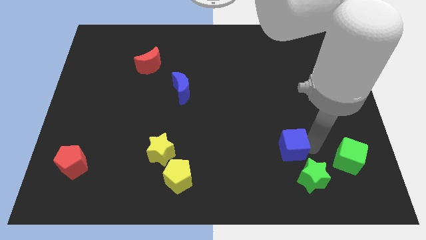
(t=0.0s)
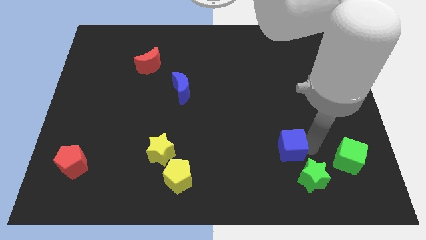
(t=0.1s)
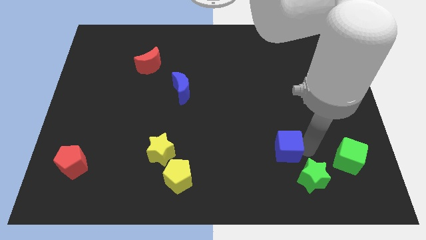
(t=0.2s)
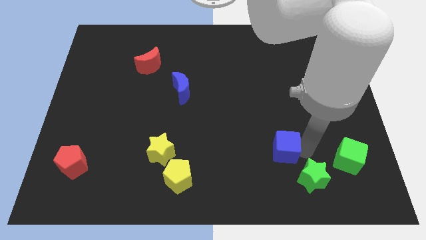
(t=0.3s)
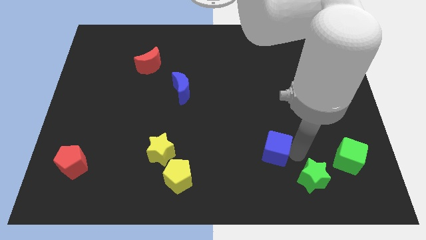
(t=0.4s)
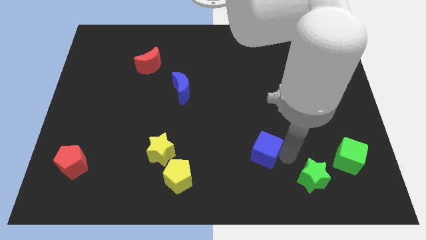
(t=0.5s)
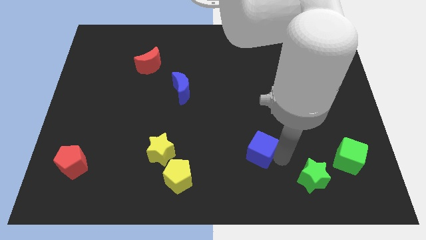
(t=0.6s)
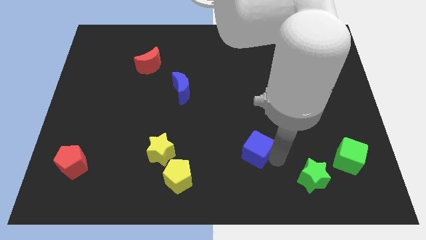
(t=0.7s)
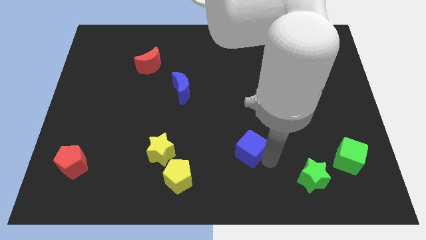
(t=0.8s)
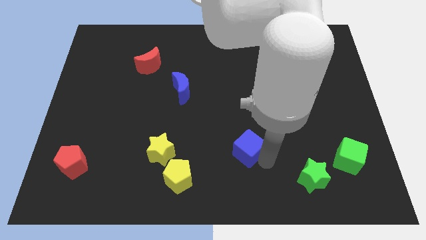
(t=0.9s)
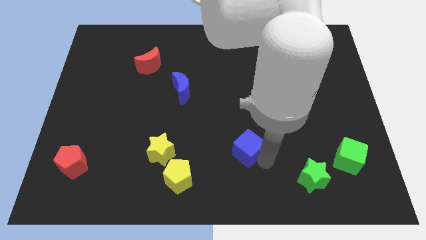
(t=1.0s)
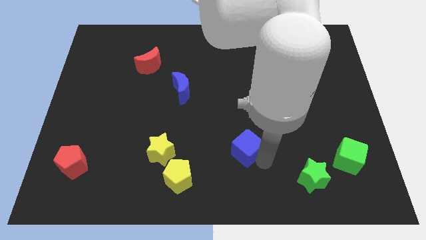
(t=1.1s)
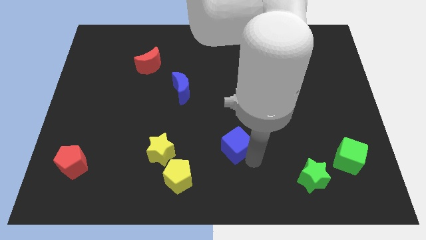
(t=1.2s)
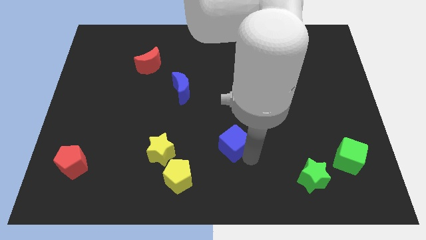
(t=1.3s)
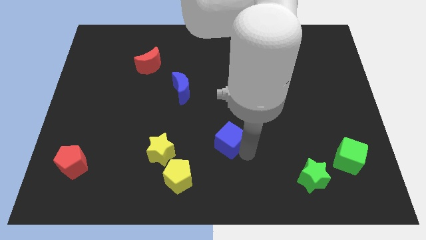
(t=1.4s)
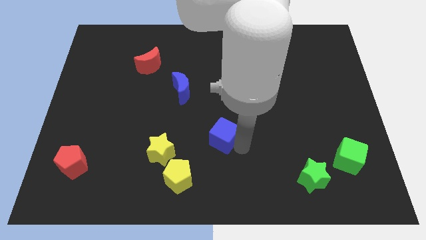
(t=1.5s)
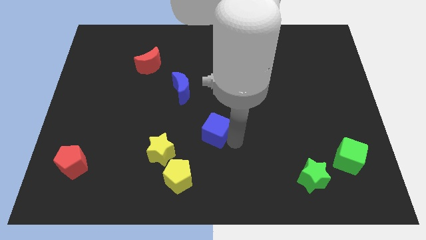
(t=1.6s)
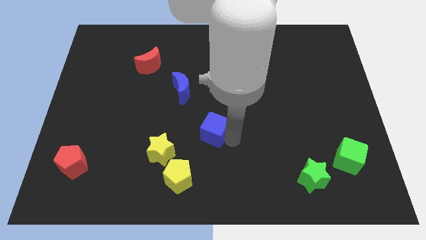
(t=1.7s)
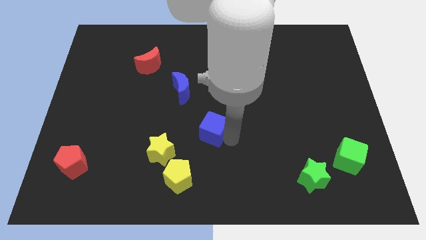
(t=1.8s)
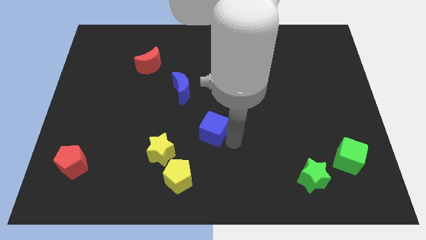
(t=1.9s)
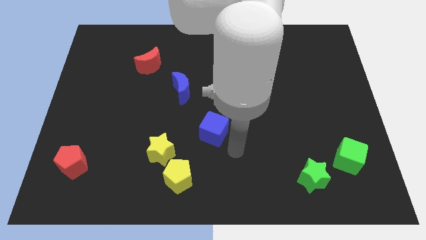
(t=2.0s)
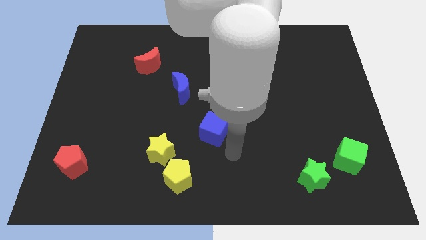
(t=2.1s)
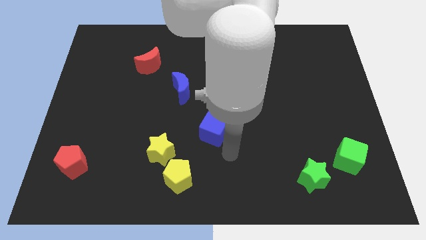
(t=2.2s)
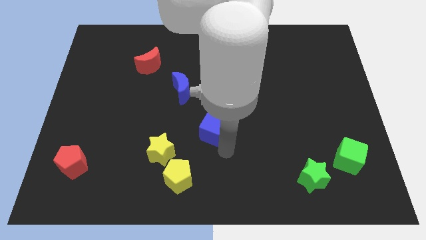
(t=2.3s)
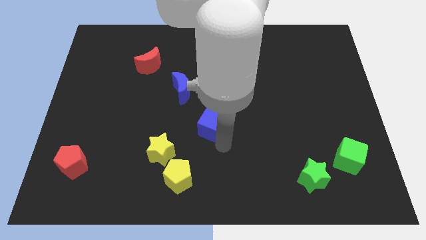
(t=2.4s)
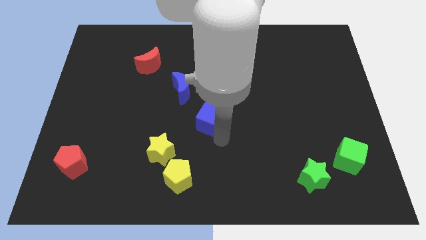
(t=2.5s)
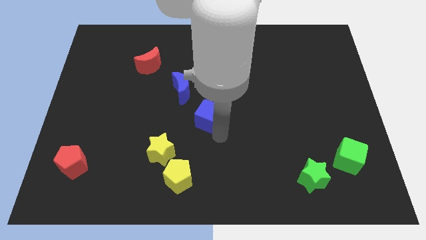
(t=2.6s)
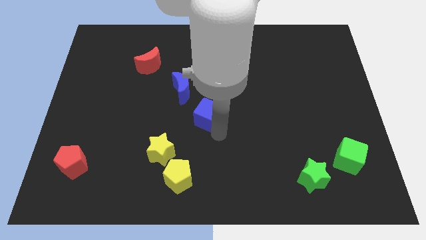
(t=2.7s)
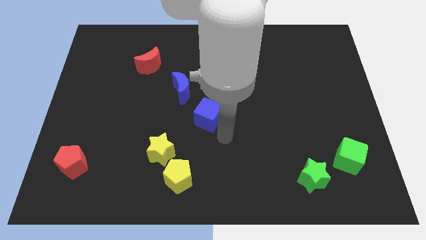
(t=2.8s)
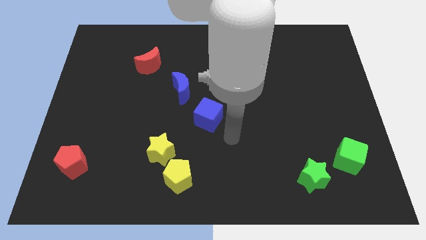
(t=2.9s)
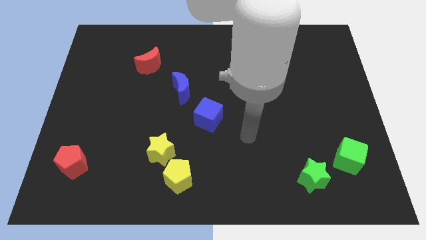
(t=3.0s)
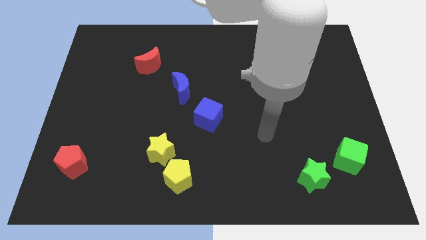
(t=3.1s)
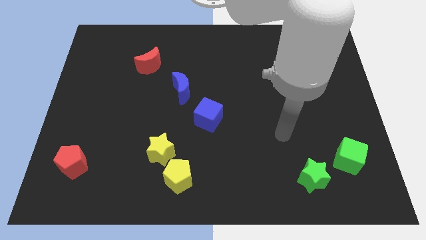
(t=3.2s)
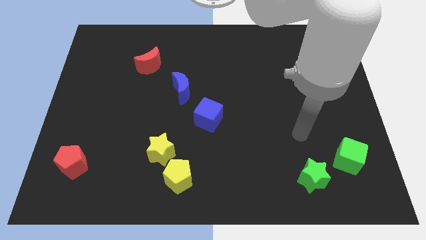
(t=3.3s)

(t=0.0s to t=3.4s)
place the blue cube diagonal to the blue crescent

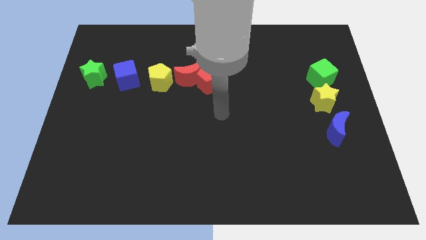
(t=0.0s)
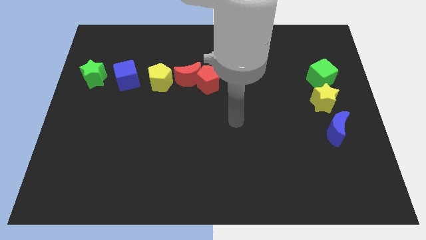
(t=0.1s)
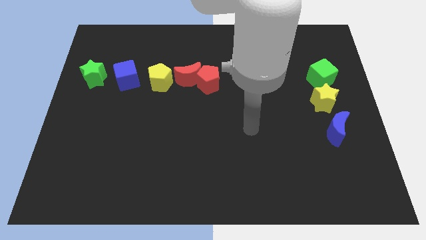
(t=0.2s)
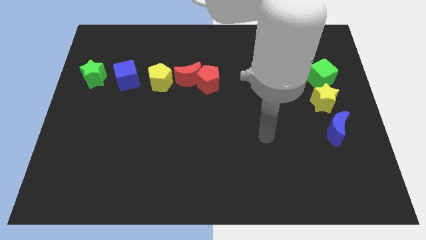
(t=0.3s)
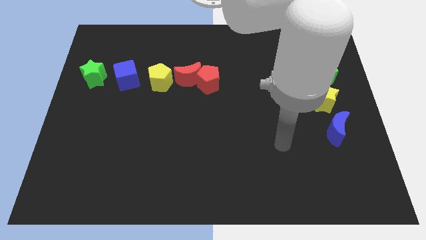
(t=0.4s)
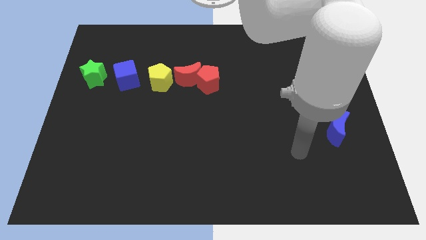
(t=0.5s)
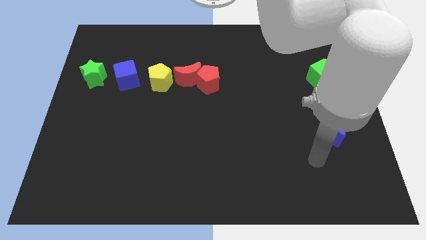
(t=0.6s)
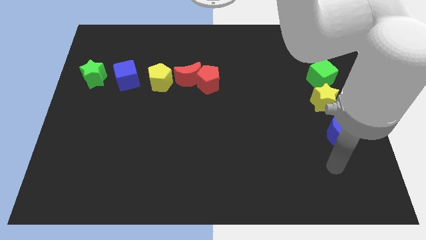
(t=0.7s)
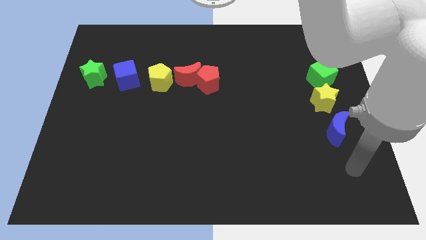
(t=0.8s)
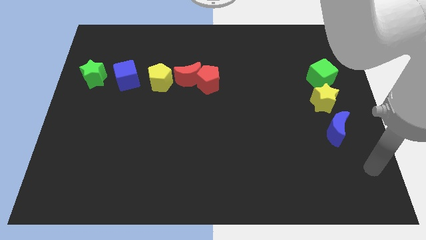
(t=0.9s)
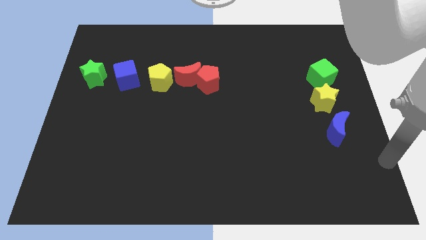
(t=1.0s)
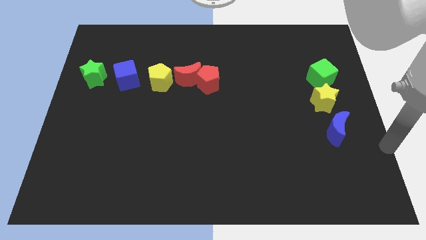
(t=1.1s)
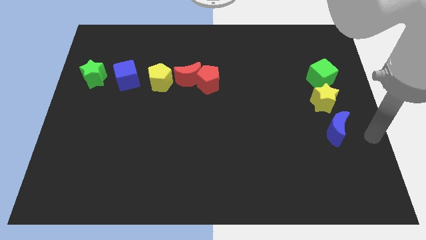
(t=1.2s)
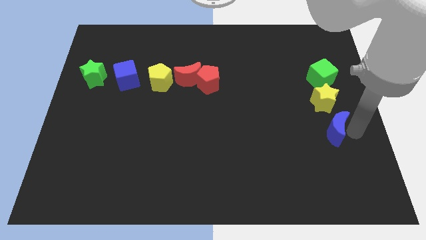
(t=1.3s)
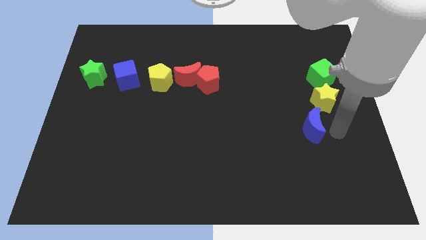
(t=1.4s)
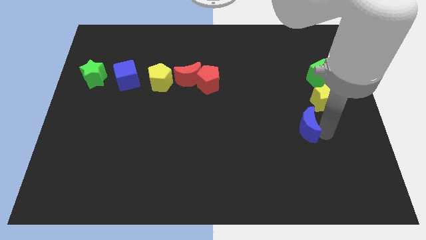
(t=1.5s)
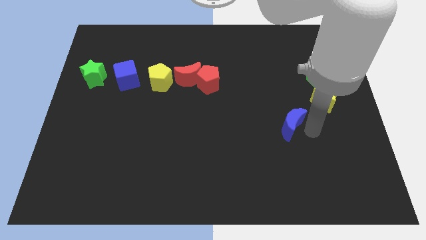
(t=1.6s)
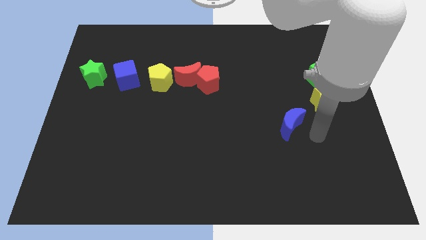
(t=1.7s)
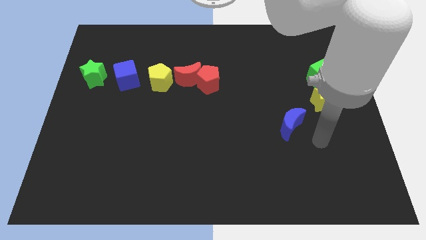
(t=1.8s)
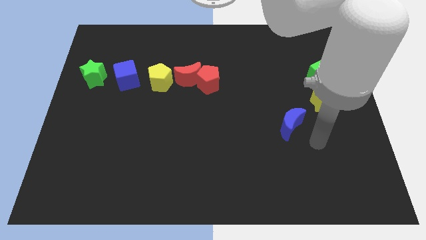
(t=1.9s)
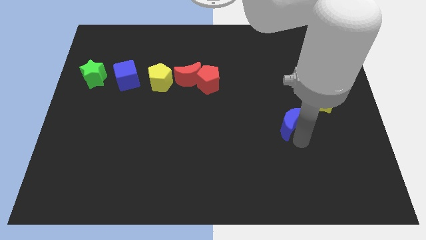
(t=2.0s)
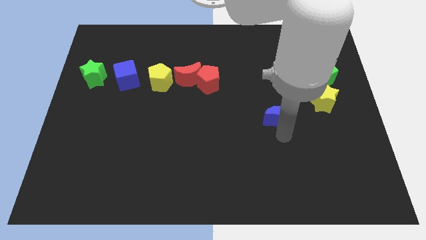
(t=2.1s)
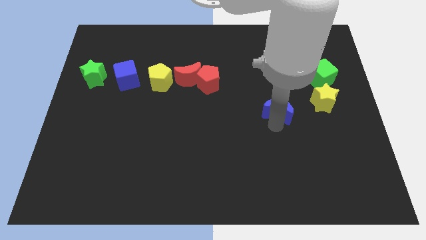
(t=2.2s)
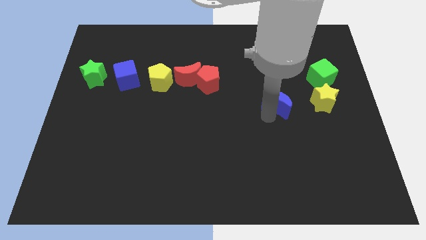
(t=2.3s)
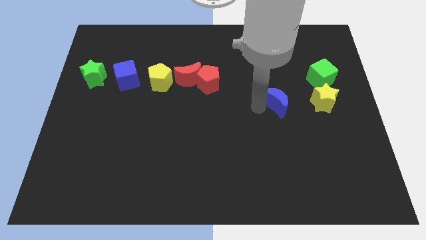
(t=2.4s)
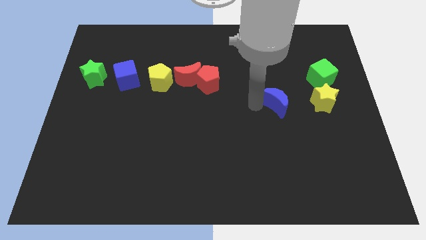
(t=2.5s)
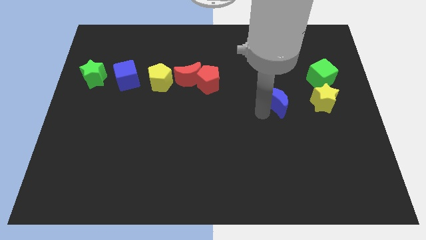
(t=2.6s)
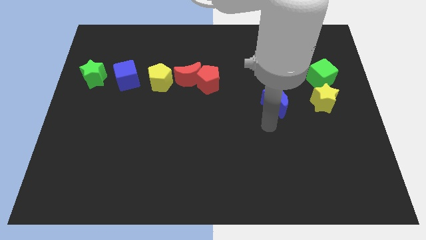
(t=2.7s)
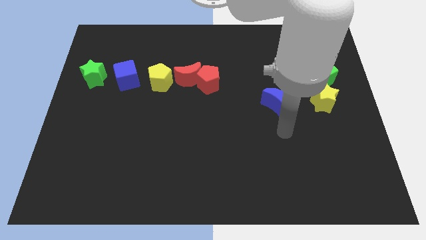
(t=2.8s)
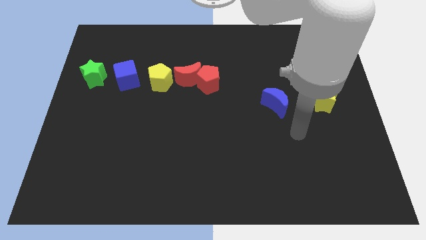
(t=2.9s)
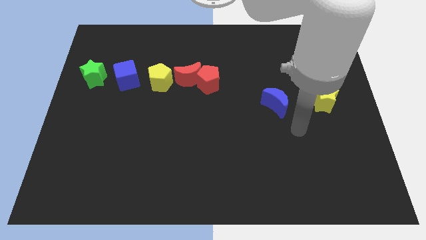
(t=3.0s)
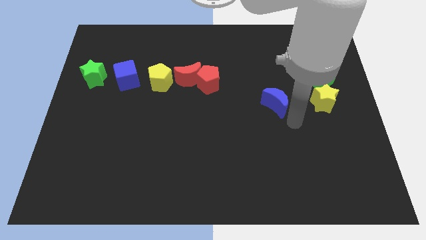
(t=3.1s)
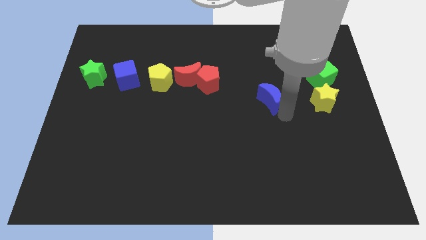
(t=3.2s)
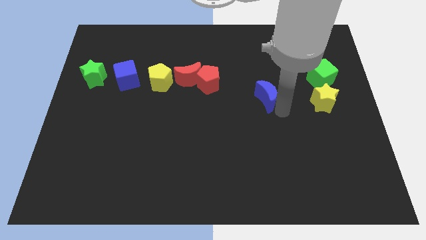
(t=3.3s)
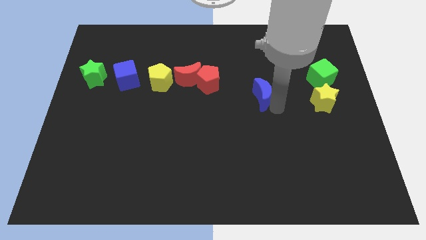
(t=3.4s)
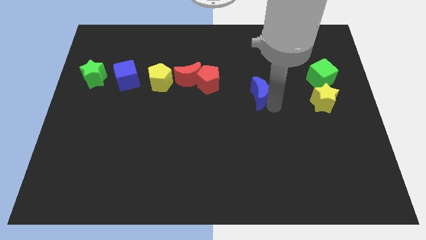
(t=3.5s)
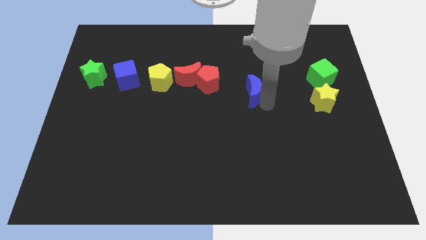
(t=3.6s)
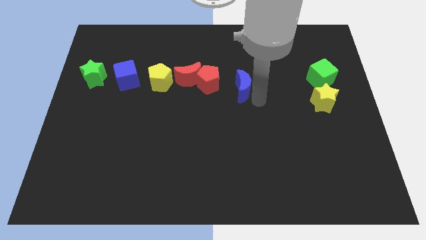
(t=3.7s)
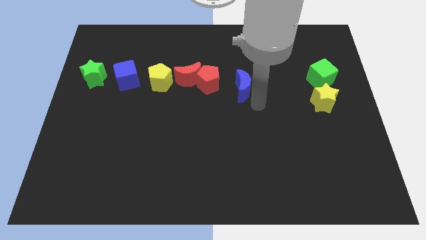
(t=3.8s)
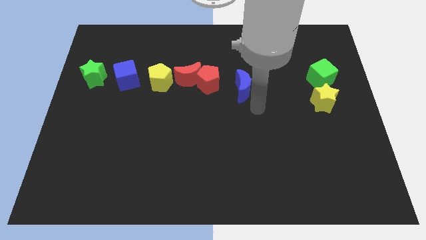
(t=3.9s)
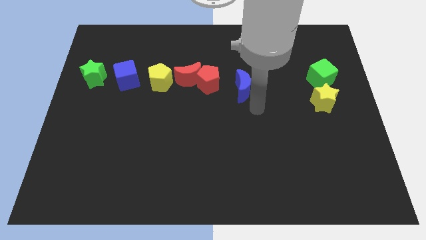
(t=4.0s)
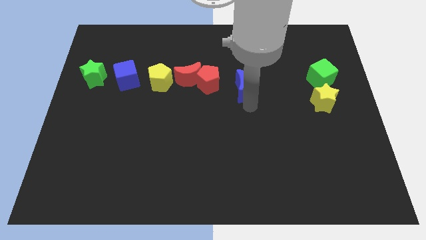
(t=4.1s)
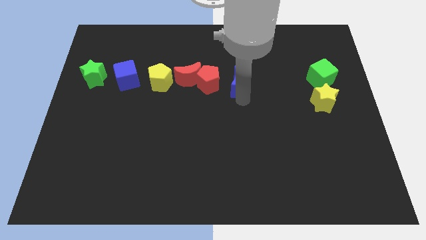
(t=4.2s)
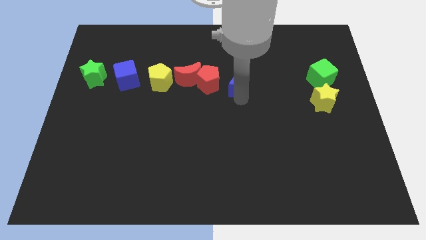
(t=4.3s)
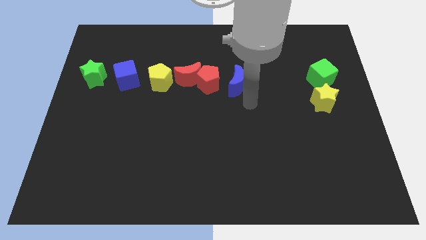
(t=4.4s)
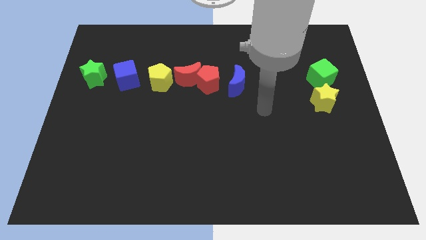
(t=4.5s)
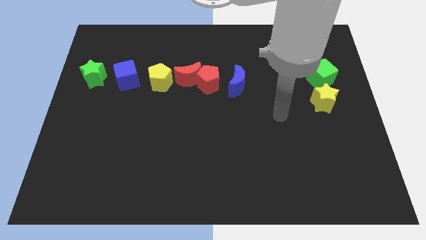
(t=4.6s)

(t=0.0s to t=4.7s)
move the blue crescent beside the red pentagon

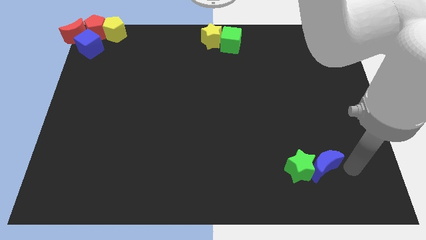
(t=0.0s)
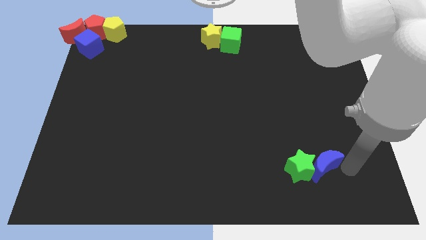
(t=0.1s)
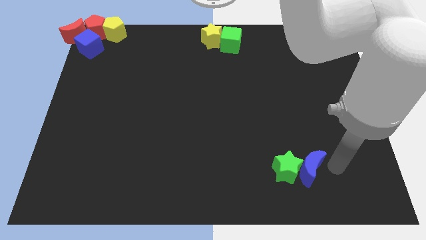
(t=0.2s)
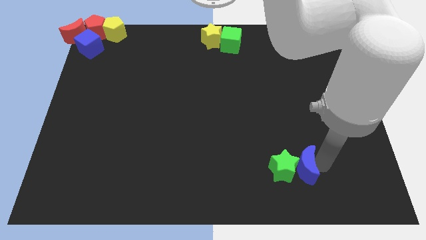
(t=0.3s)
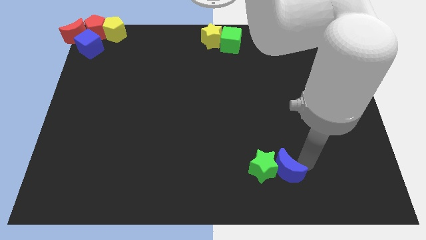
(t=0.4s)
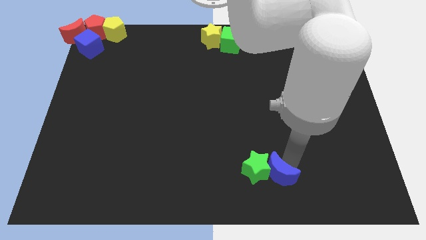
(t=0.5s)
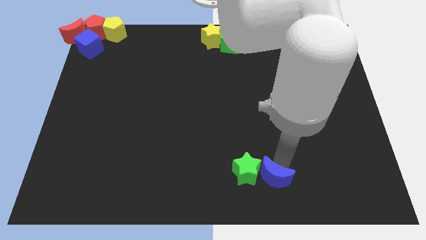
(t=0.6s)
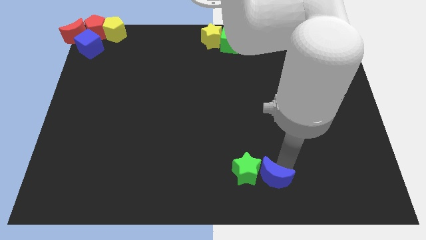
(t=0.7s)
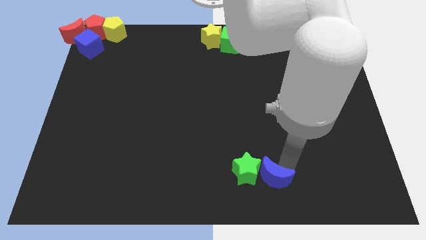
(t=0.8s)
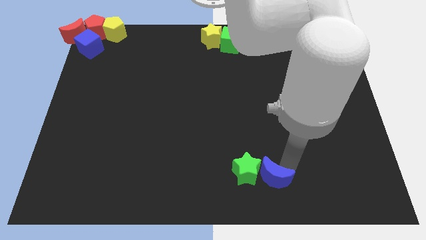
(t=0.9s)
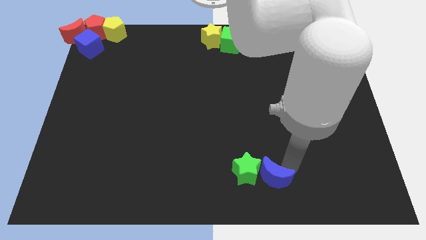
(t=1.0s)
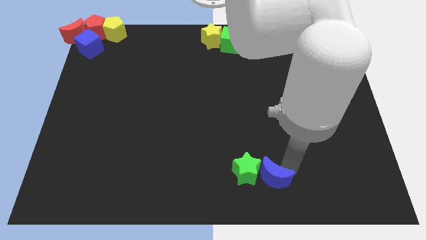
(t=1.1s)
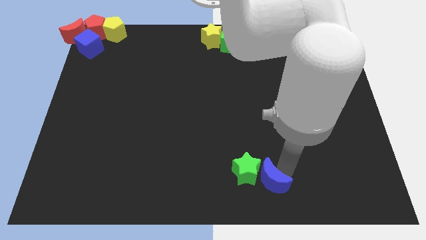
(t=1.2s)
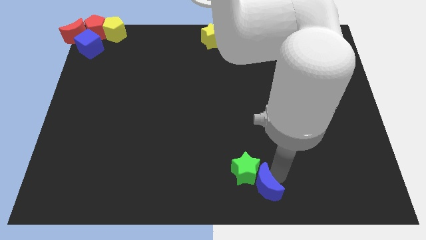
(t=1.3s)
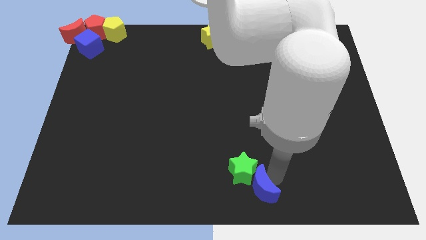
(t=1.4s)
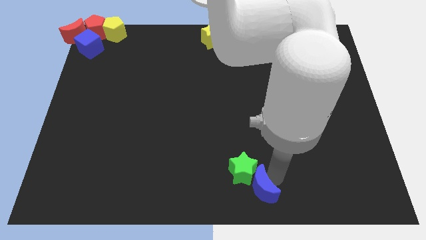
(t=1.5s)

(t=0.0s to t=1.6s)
push the blue moon and green star towards the left side
